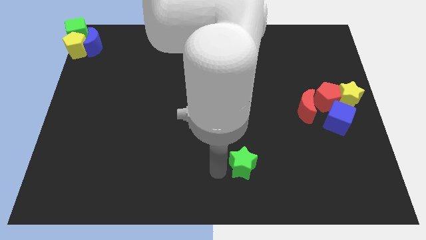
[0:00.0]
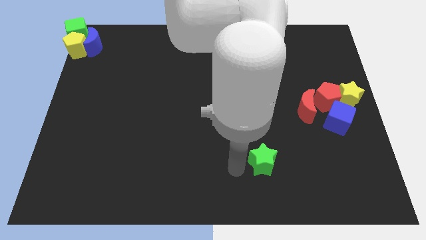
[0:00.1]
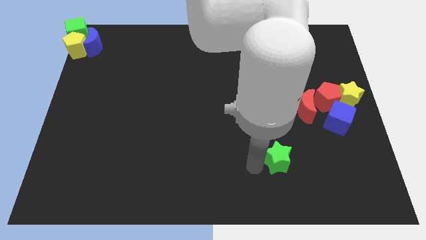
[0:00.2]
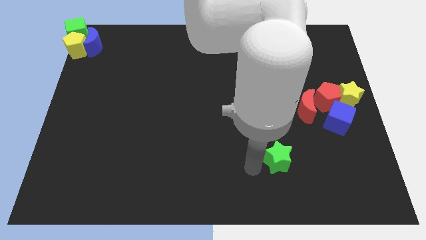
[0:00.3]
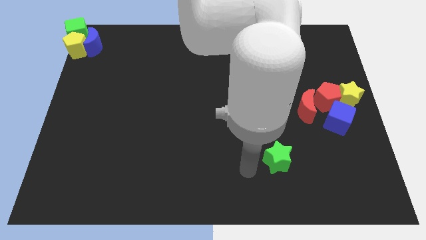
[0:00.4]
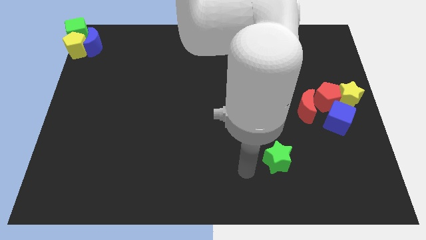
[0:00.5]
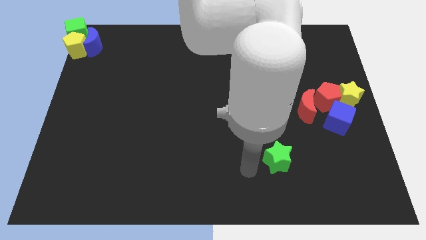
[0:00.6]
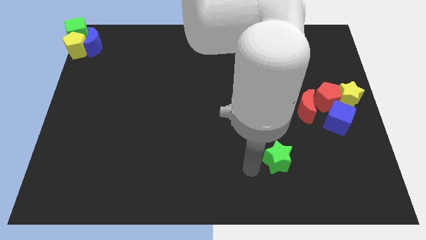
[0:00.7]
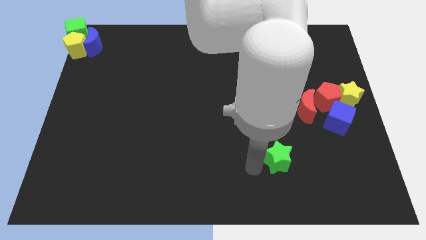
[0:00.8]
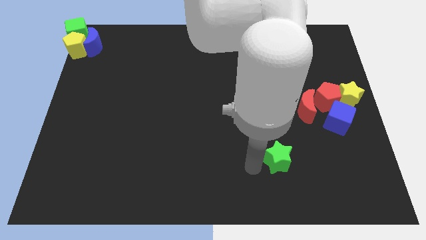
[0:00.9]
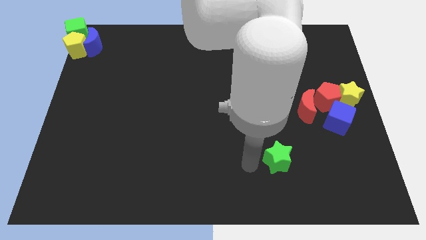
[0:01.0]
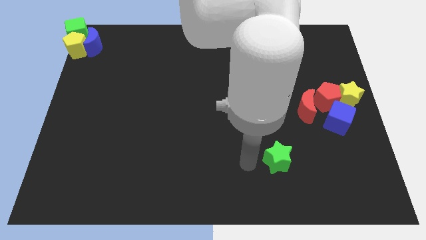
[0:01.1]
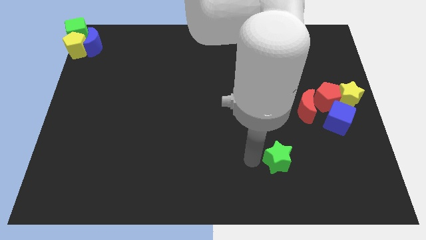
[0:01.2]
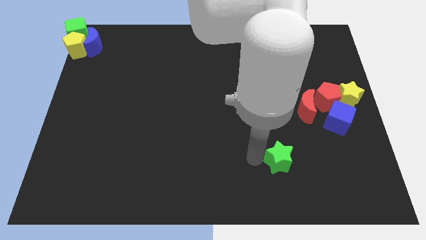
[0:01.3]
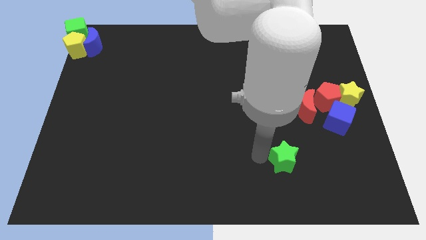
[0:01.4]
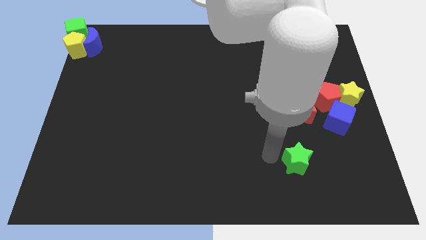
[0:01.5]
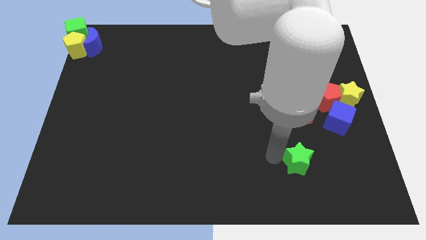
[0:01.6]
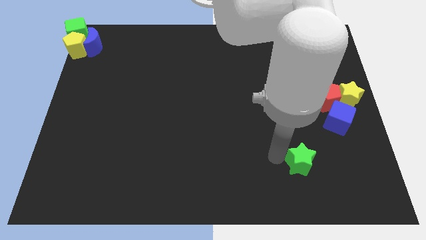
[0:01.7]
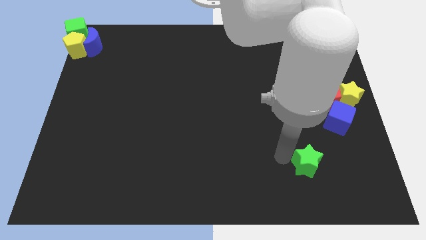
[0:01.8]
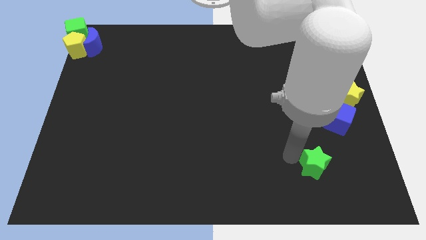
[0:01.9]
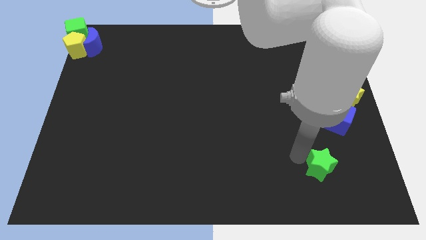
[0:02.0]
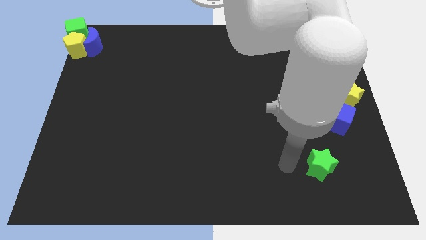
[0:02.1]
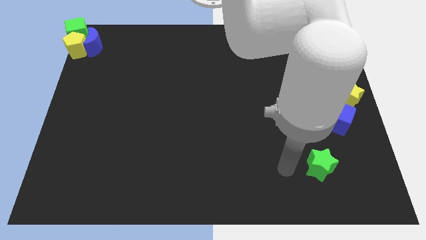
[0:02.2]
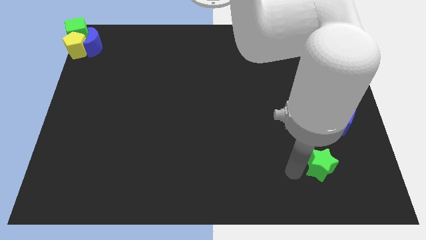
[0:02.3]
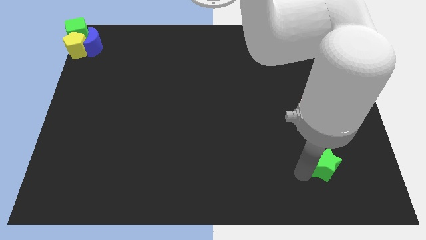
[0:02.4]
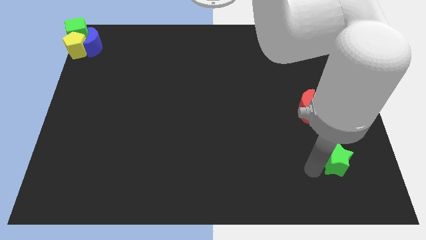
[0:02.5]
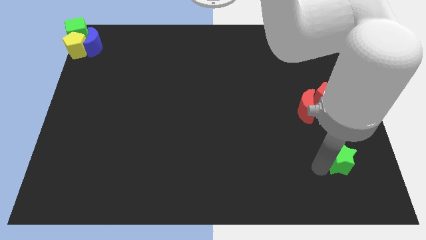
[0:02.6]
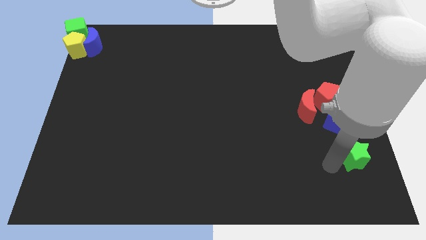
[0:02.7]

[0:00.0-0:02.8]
push green star below blue cube

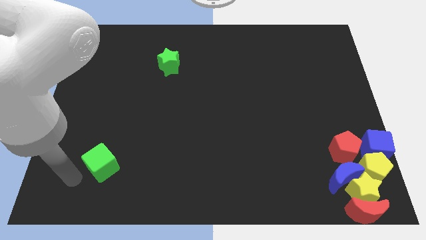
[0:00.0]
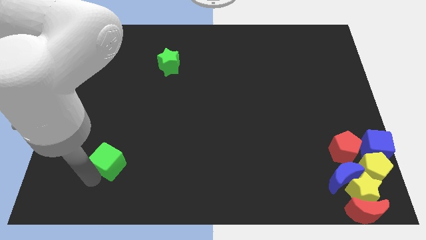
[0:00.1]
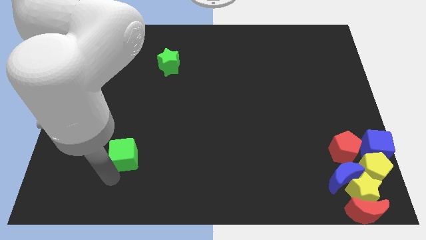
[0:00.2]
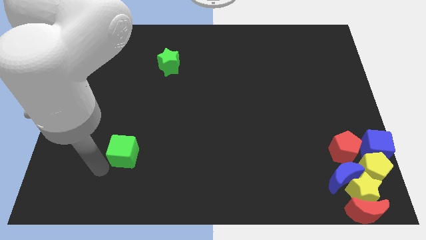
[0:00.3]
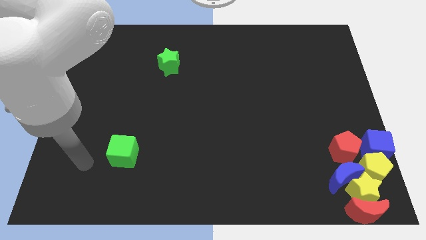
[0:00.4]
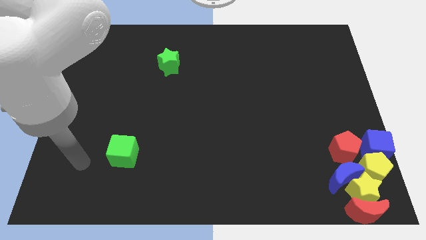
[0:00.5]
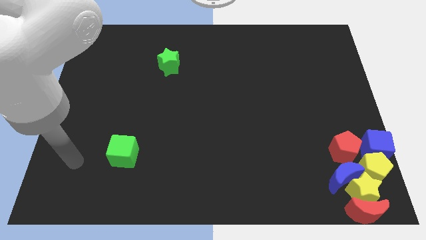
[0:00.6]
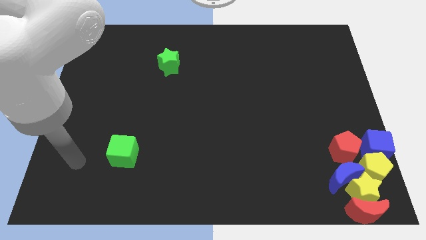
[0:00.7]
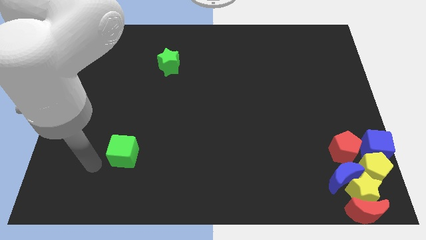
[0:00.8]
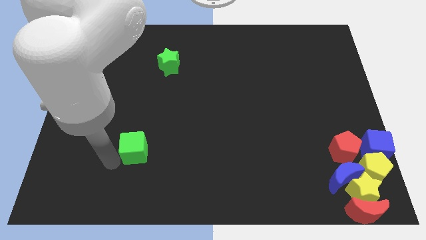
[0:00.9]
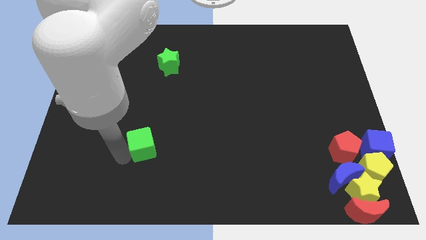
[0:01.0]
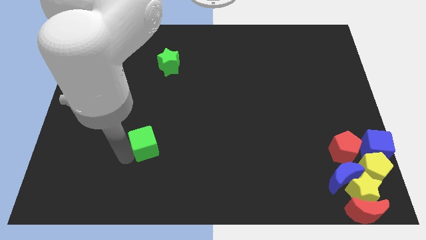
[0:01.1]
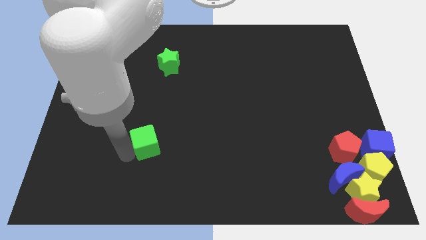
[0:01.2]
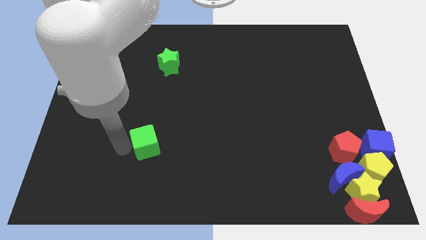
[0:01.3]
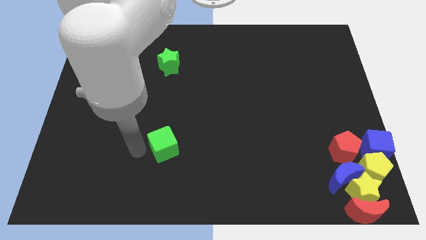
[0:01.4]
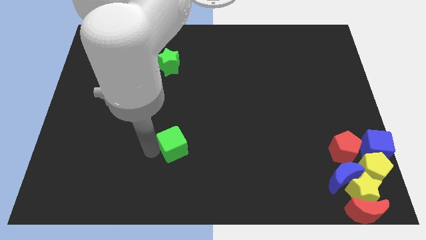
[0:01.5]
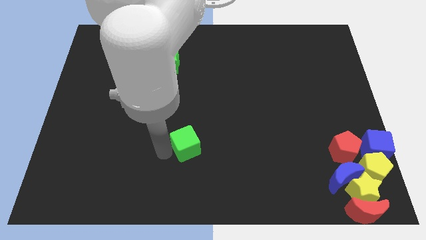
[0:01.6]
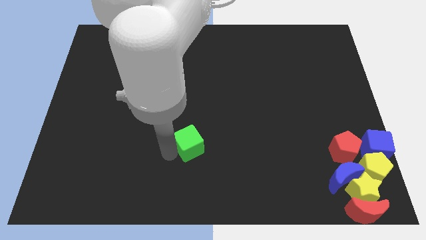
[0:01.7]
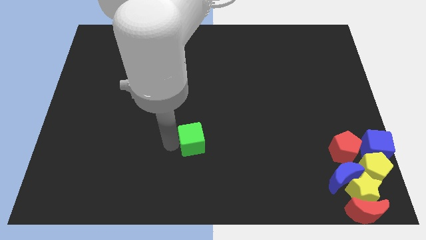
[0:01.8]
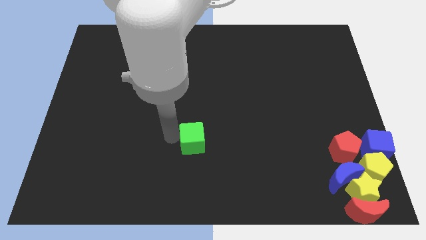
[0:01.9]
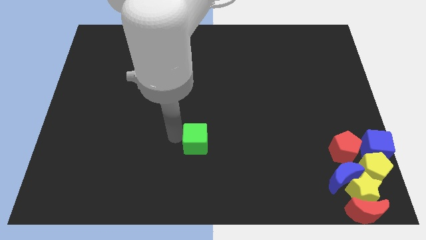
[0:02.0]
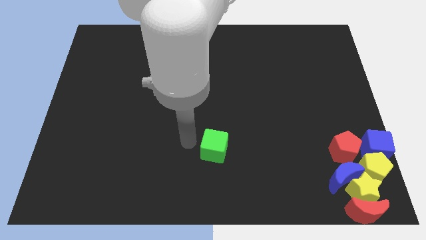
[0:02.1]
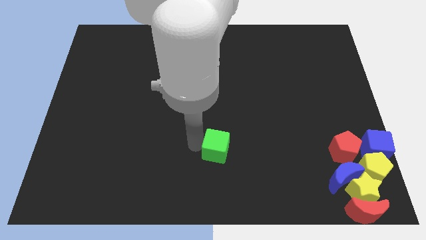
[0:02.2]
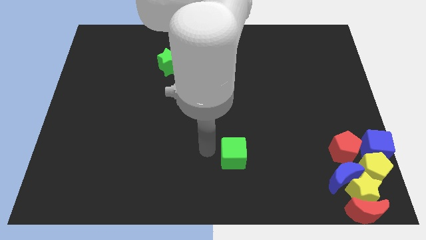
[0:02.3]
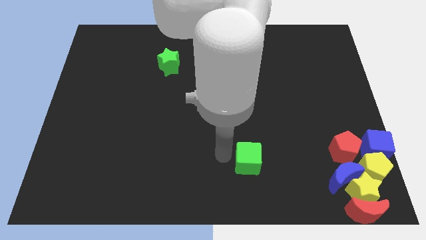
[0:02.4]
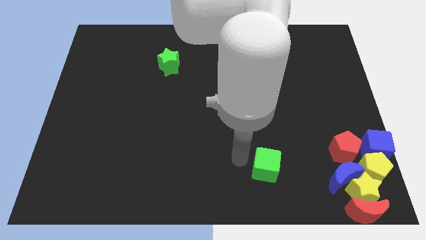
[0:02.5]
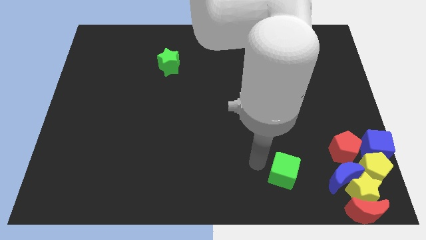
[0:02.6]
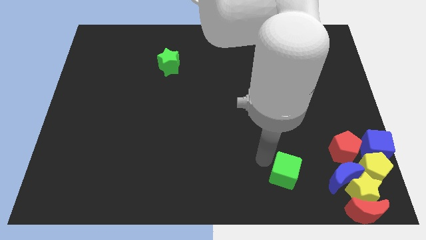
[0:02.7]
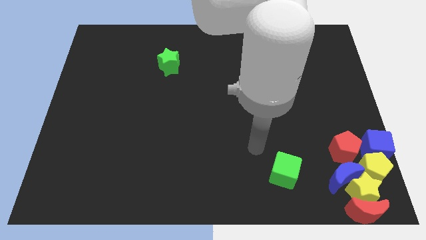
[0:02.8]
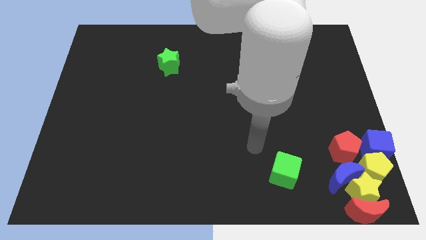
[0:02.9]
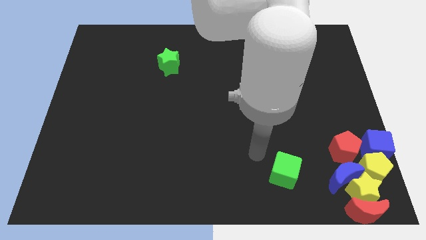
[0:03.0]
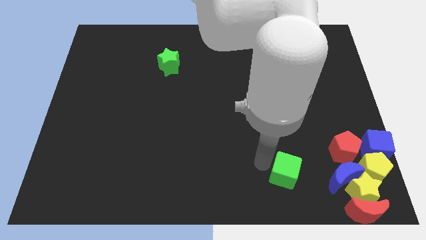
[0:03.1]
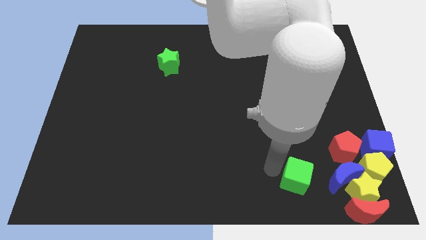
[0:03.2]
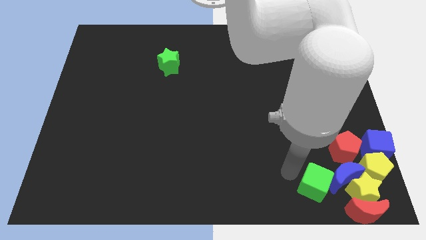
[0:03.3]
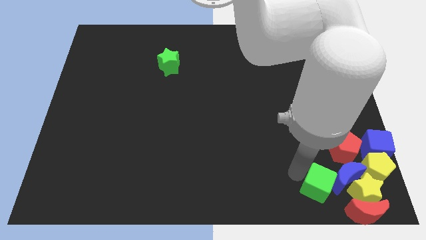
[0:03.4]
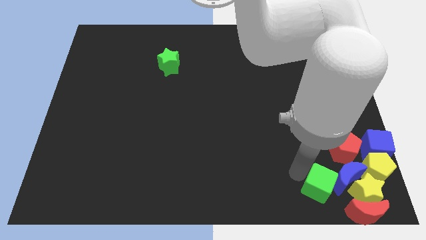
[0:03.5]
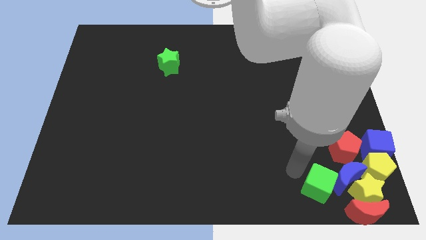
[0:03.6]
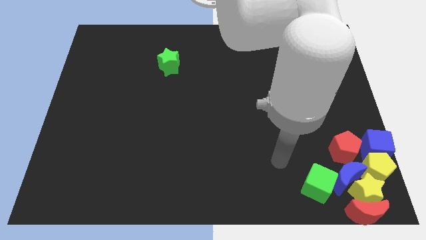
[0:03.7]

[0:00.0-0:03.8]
move the green cube to the left of the blue crescent

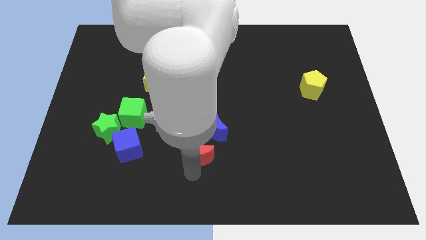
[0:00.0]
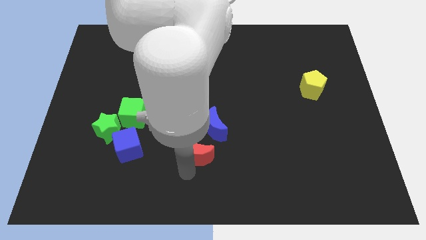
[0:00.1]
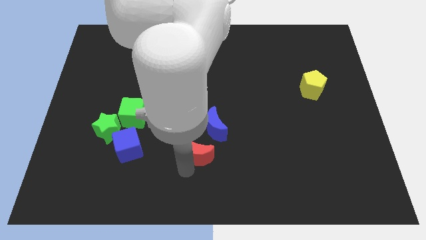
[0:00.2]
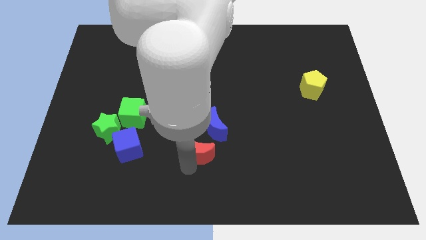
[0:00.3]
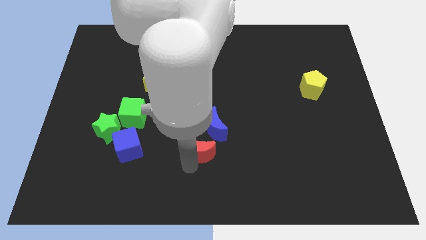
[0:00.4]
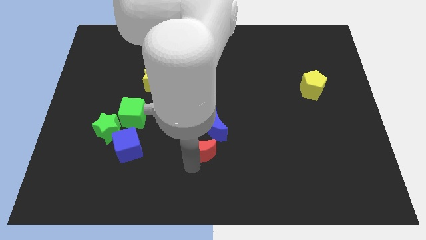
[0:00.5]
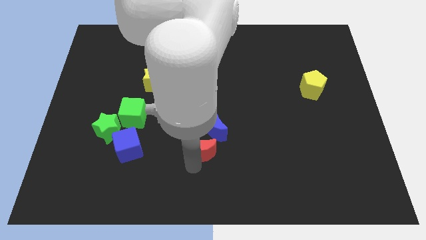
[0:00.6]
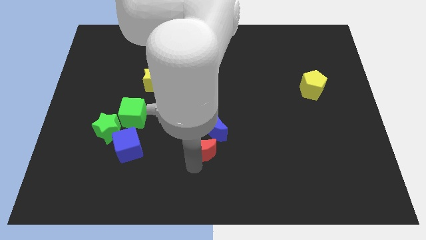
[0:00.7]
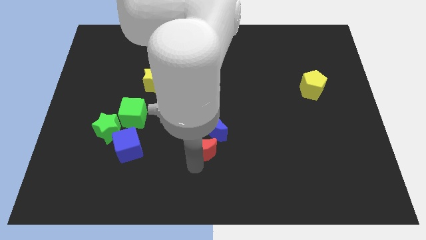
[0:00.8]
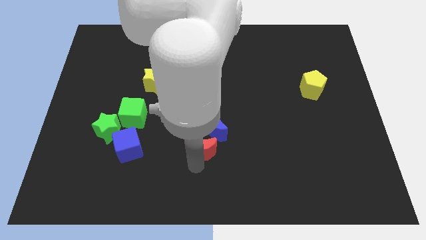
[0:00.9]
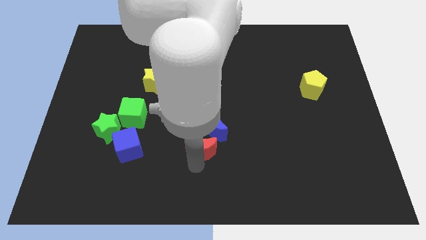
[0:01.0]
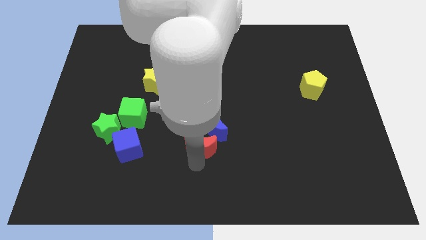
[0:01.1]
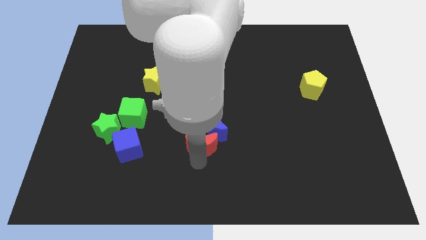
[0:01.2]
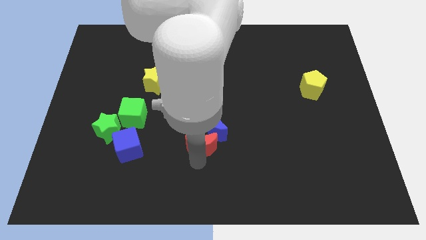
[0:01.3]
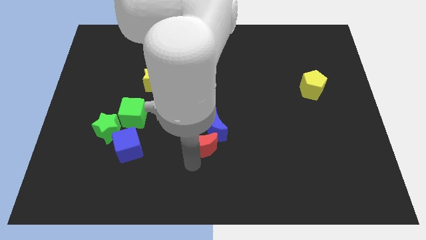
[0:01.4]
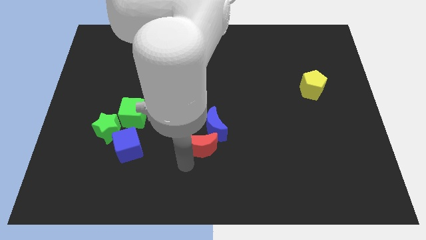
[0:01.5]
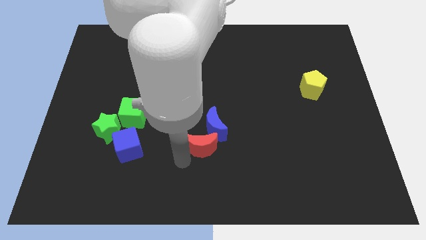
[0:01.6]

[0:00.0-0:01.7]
move red crescent into blue crescent

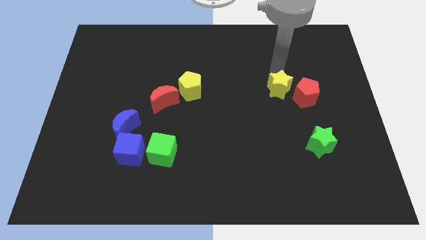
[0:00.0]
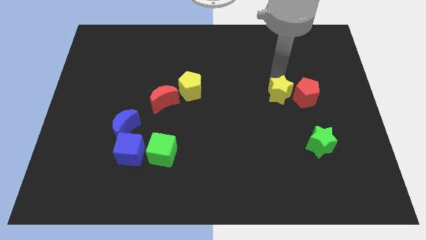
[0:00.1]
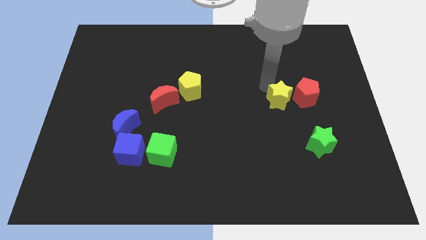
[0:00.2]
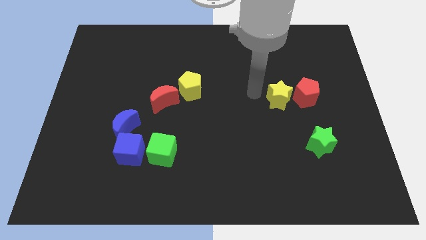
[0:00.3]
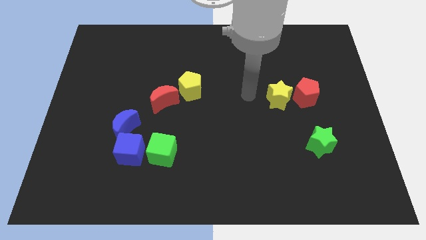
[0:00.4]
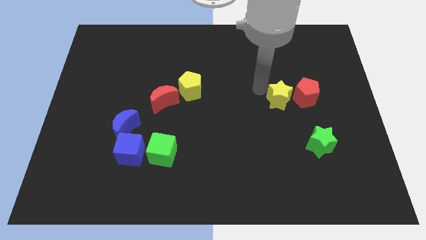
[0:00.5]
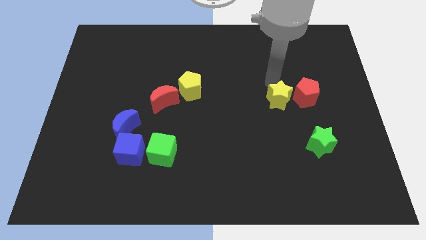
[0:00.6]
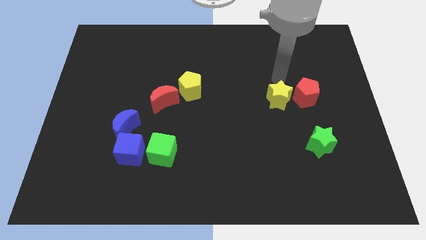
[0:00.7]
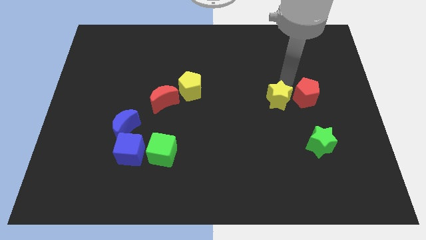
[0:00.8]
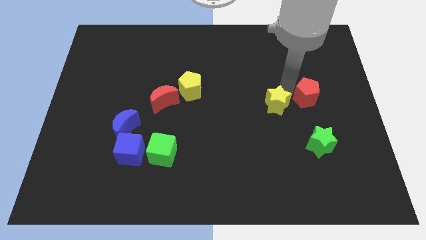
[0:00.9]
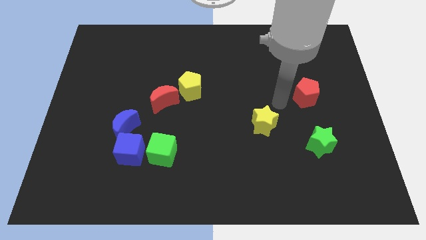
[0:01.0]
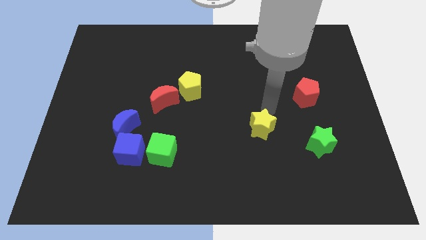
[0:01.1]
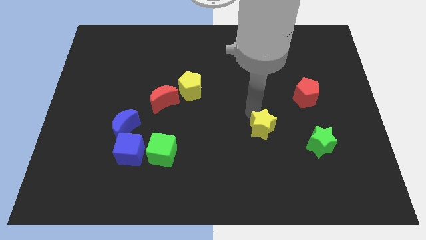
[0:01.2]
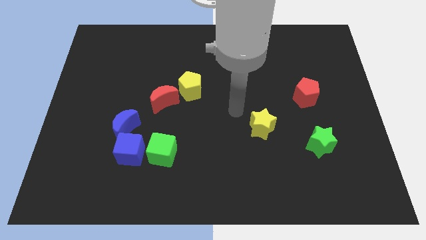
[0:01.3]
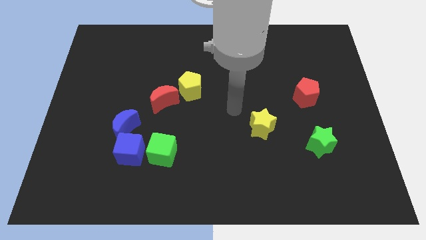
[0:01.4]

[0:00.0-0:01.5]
move the yellow star away from the red pentagon
